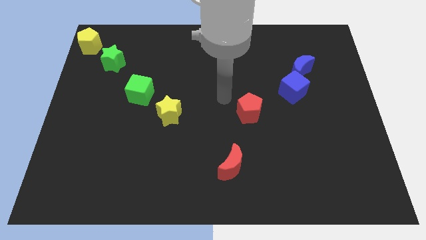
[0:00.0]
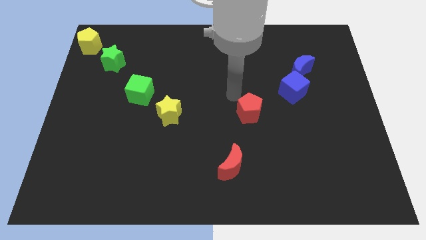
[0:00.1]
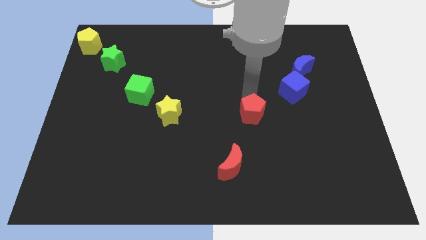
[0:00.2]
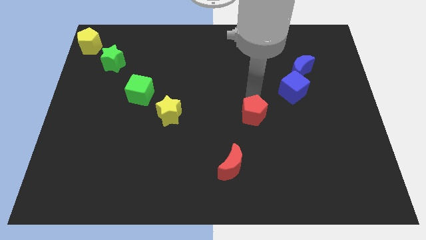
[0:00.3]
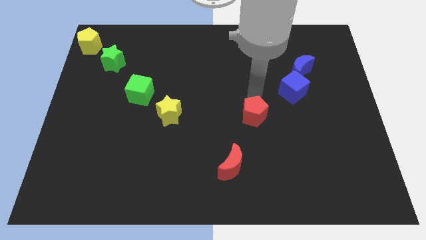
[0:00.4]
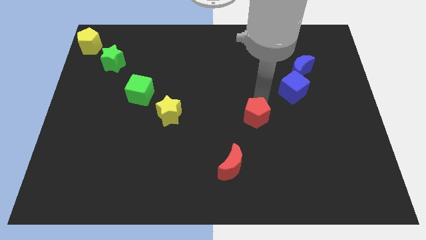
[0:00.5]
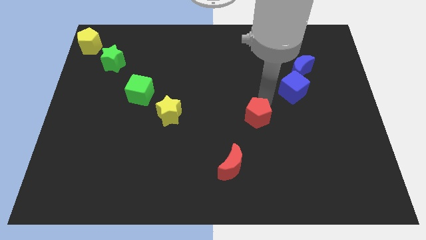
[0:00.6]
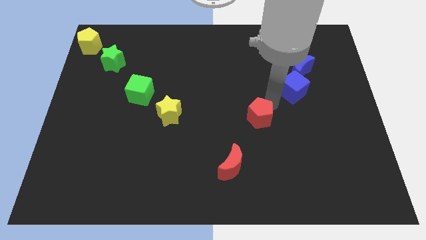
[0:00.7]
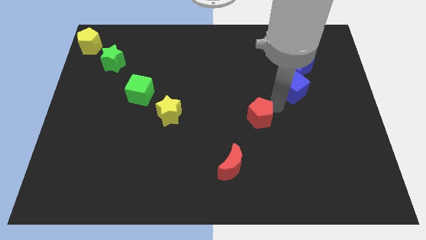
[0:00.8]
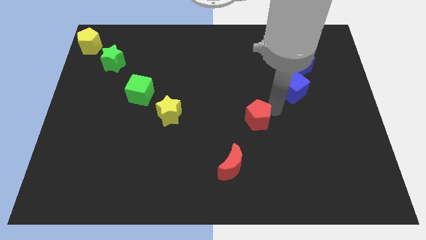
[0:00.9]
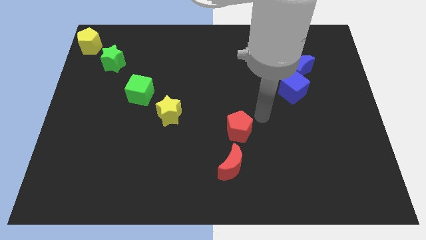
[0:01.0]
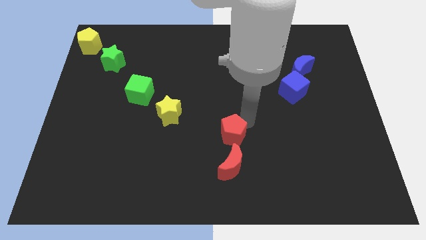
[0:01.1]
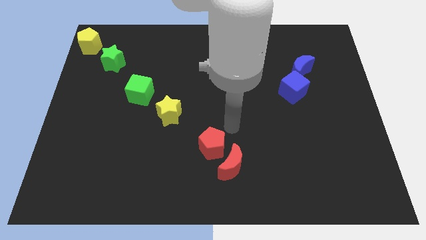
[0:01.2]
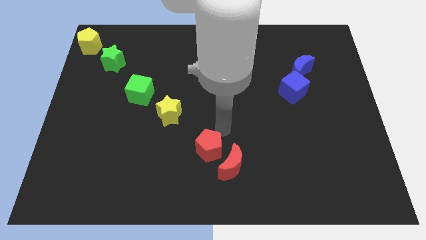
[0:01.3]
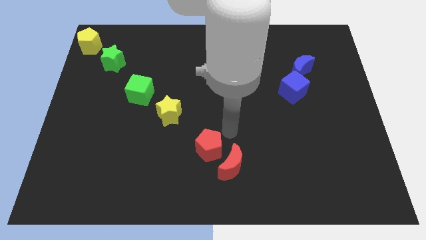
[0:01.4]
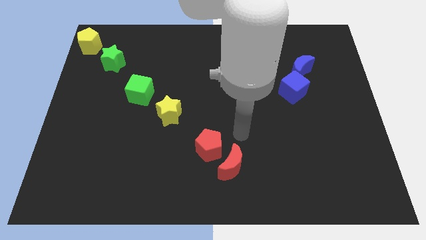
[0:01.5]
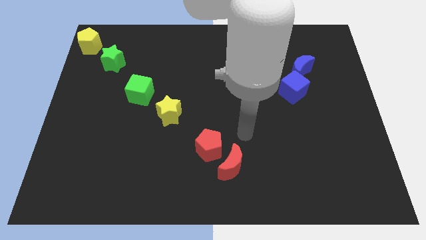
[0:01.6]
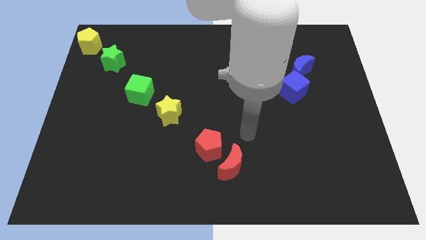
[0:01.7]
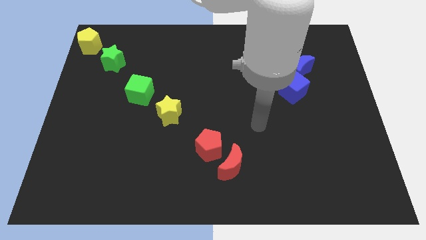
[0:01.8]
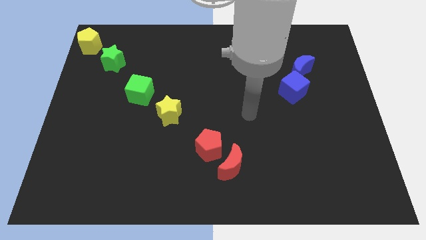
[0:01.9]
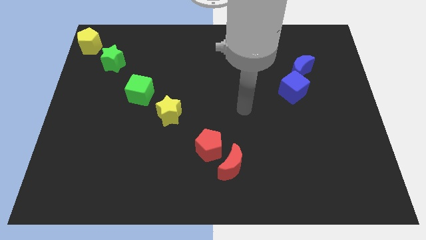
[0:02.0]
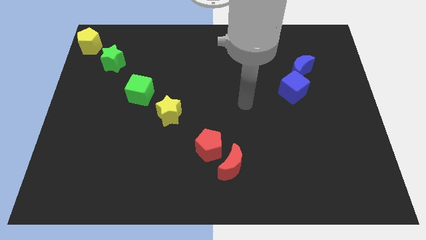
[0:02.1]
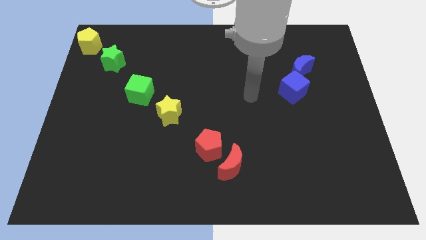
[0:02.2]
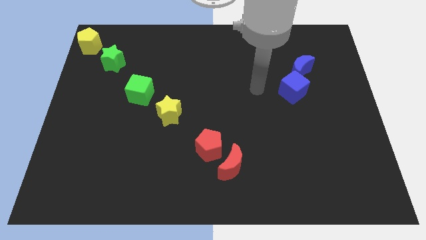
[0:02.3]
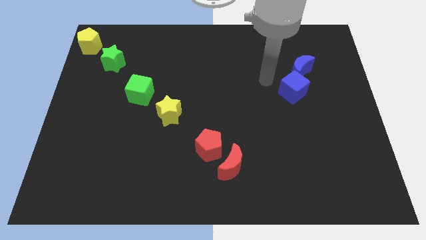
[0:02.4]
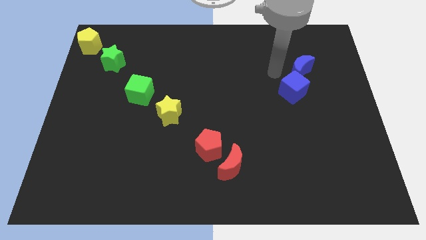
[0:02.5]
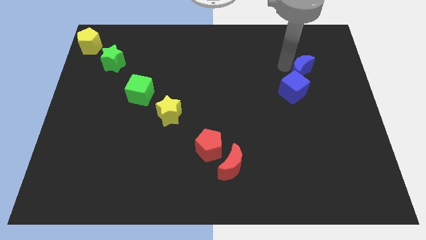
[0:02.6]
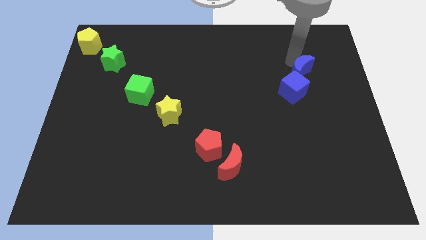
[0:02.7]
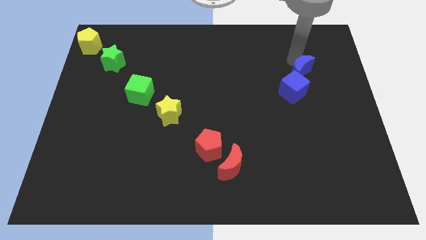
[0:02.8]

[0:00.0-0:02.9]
move the red pentagon diagonally bottom right to the yellow star

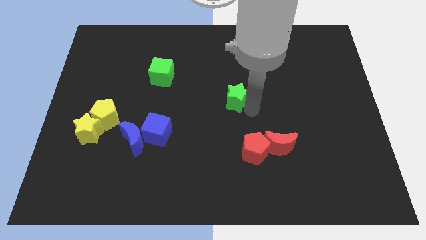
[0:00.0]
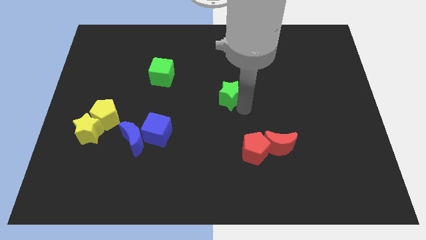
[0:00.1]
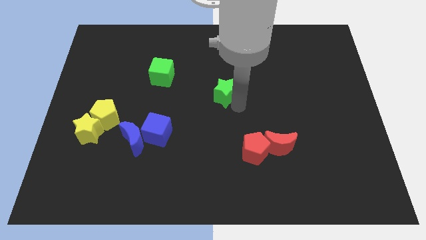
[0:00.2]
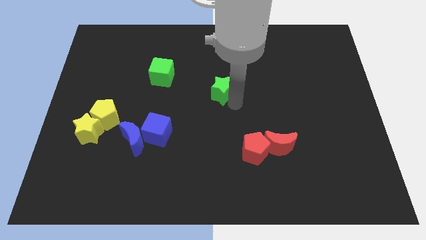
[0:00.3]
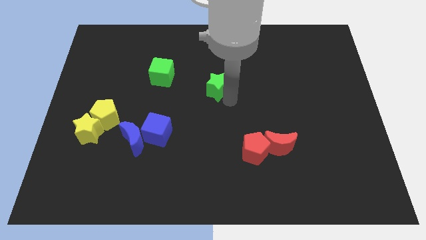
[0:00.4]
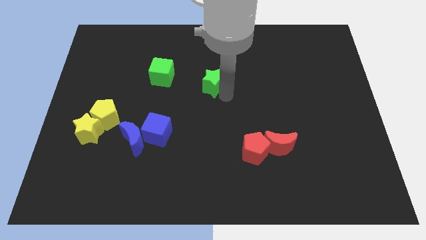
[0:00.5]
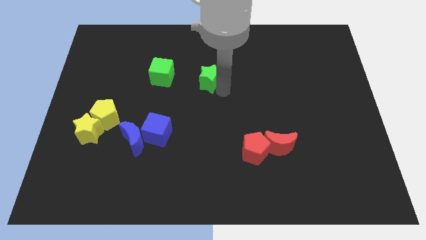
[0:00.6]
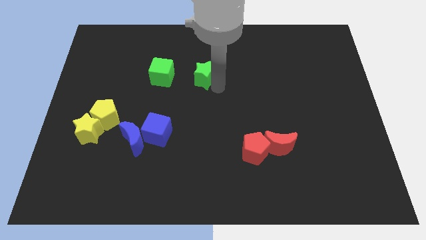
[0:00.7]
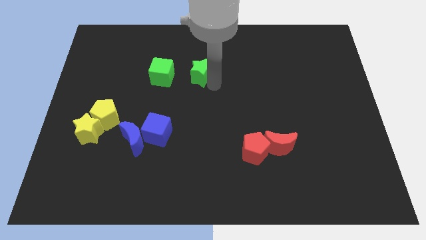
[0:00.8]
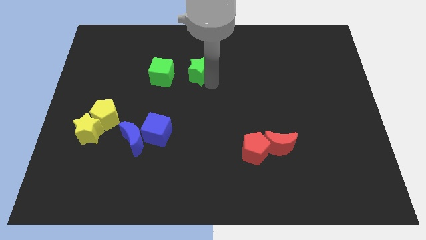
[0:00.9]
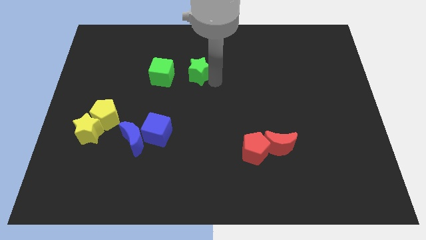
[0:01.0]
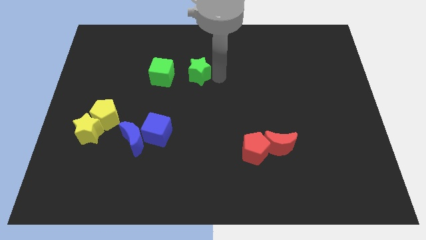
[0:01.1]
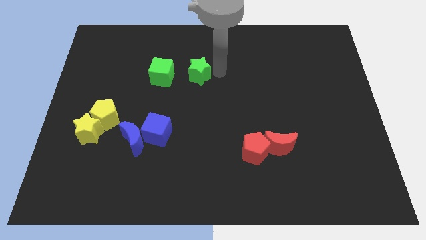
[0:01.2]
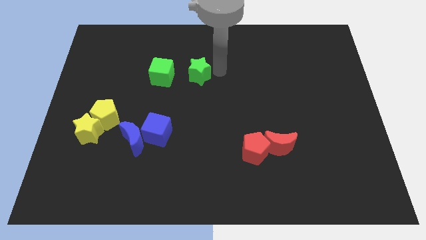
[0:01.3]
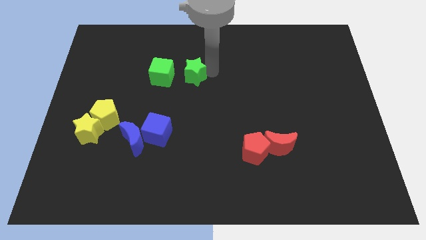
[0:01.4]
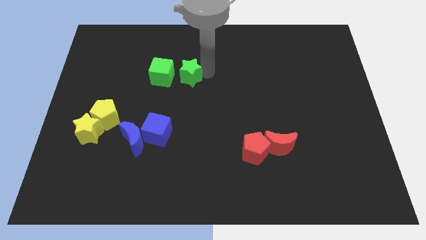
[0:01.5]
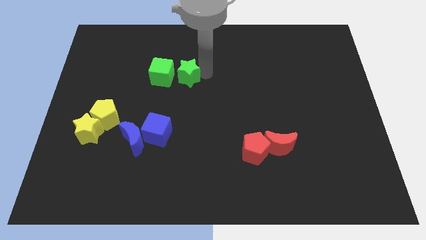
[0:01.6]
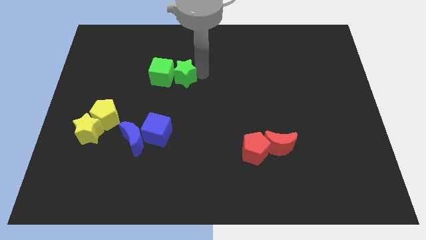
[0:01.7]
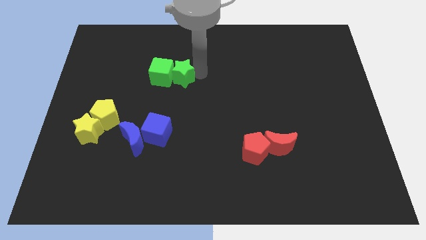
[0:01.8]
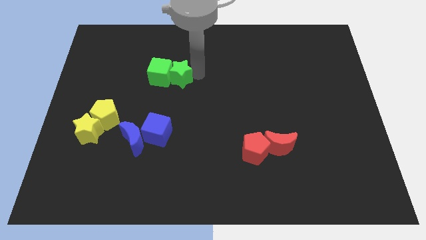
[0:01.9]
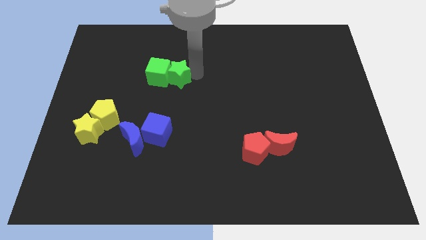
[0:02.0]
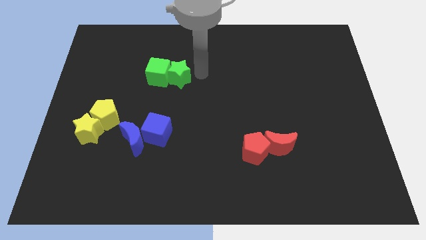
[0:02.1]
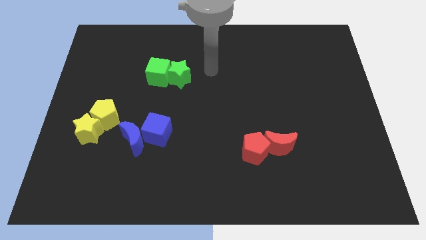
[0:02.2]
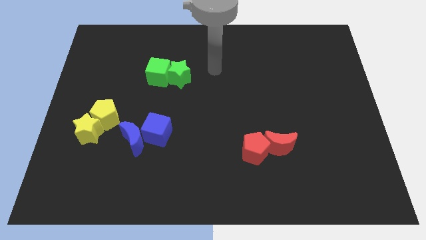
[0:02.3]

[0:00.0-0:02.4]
move the green star in to green cube

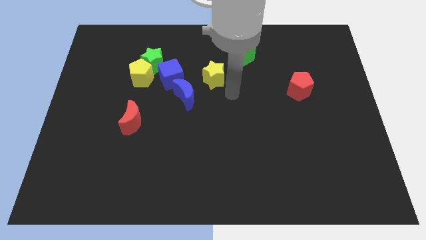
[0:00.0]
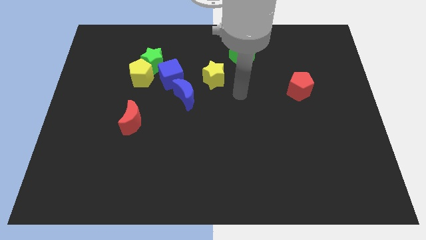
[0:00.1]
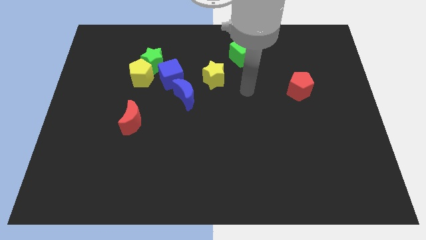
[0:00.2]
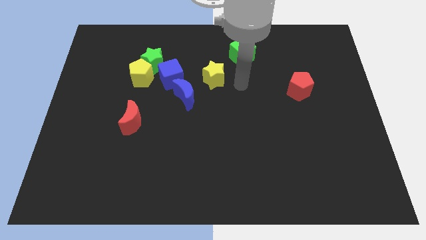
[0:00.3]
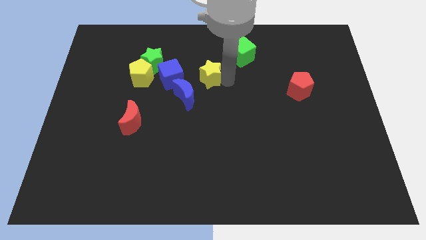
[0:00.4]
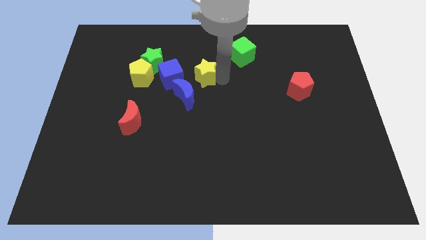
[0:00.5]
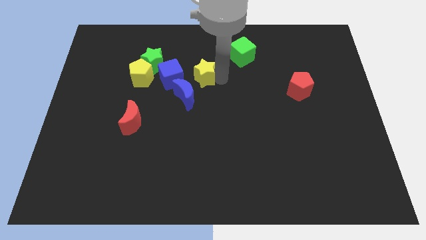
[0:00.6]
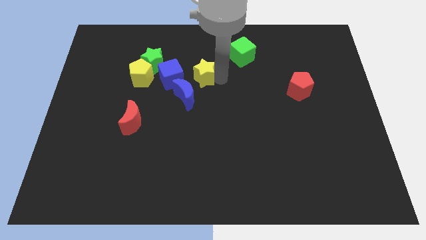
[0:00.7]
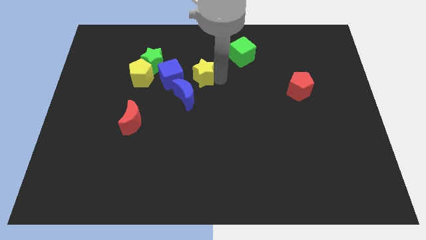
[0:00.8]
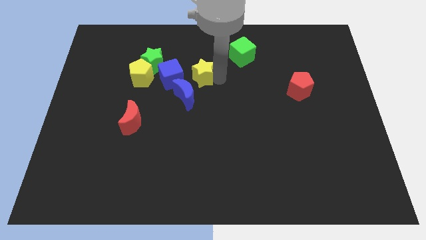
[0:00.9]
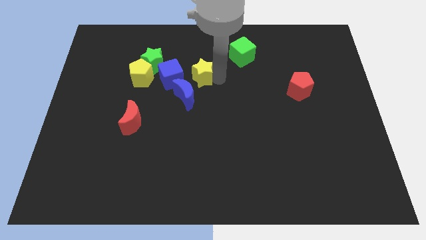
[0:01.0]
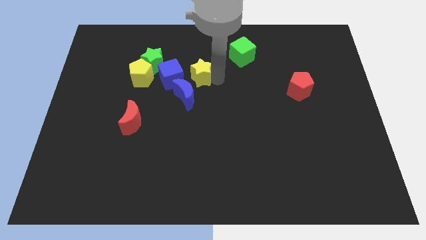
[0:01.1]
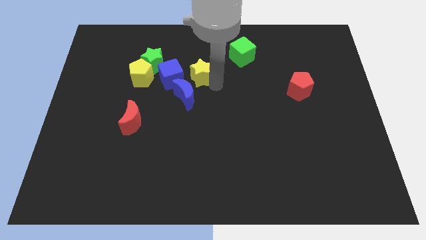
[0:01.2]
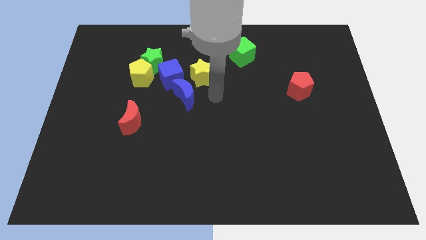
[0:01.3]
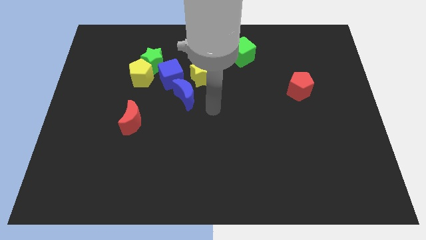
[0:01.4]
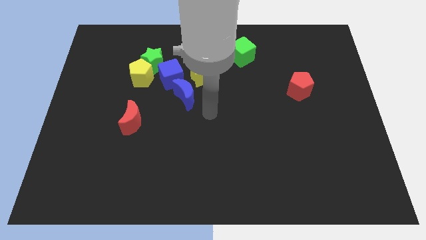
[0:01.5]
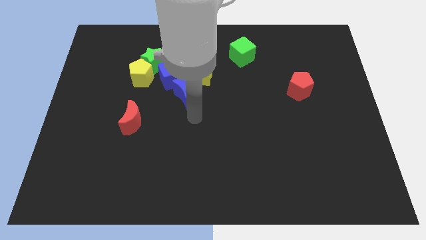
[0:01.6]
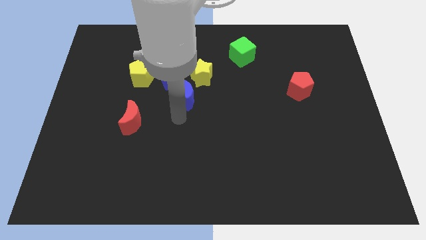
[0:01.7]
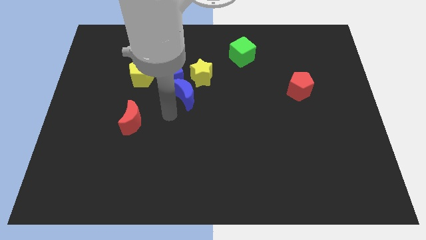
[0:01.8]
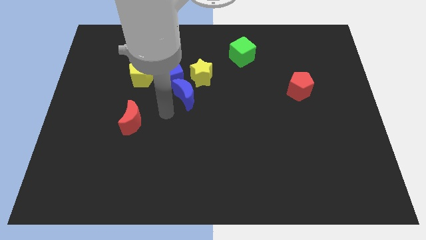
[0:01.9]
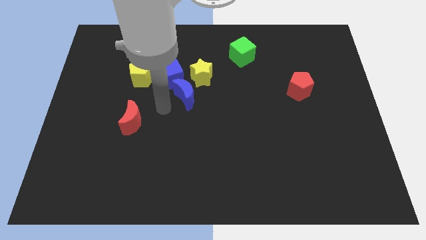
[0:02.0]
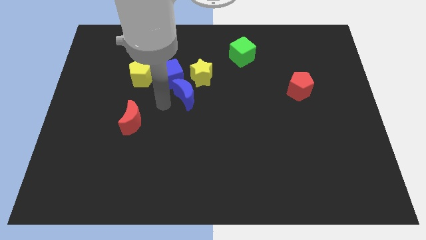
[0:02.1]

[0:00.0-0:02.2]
place the yellow star on bottom left side of green cube

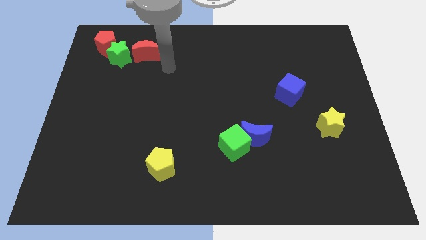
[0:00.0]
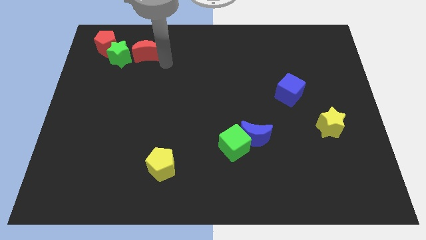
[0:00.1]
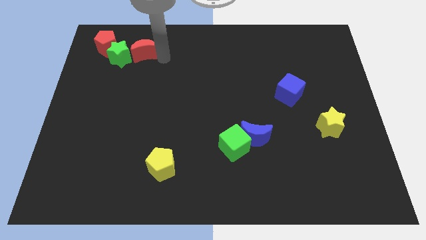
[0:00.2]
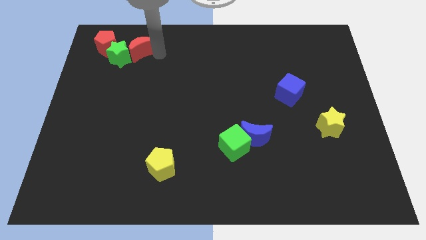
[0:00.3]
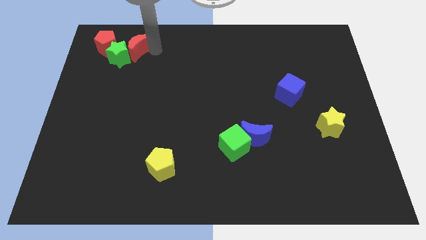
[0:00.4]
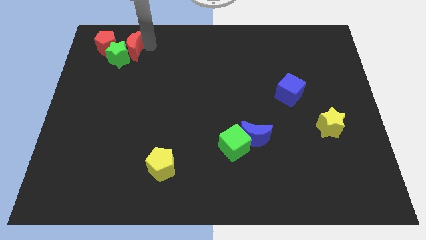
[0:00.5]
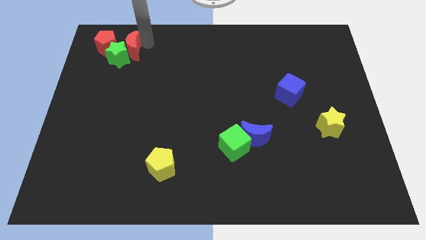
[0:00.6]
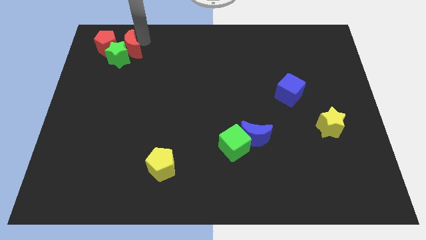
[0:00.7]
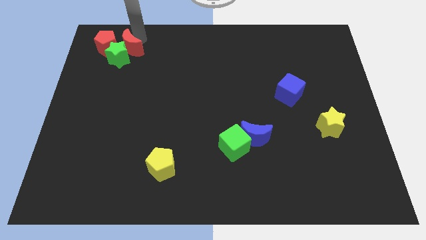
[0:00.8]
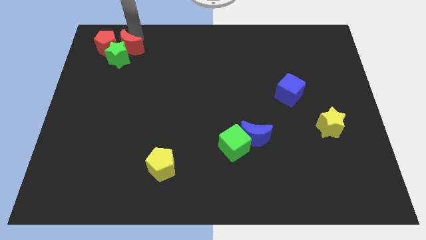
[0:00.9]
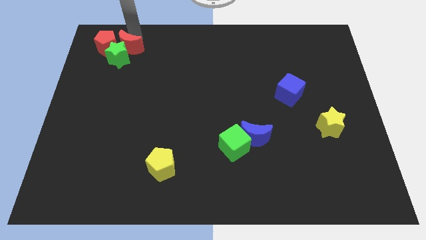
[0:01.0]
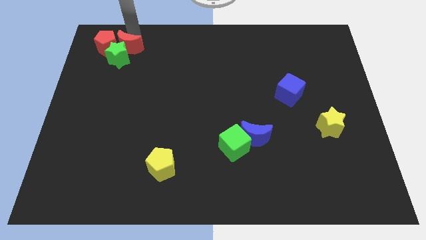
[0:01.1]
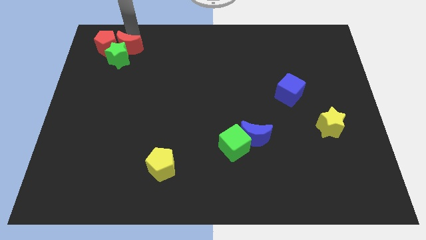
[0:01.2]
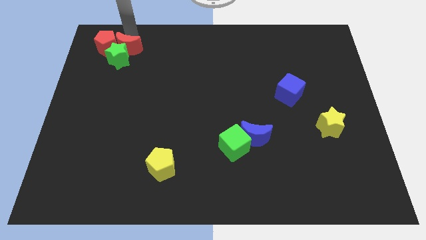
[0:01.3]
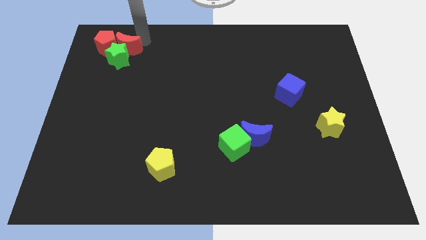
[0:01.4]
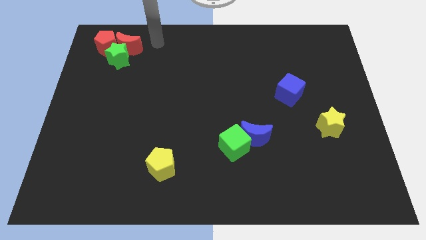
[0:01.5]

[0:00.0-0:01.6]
push the red crescent close to the red pentagon
